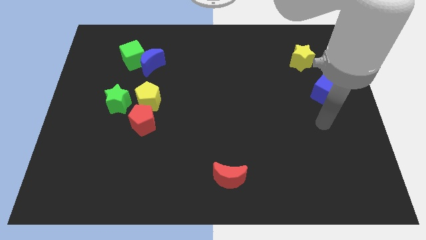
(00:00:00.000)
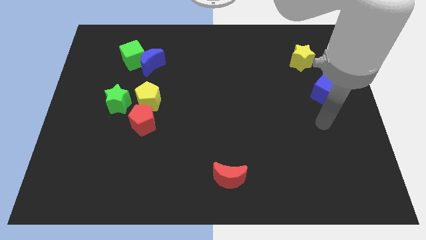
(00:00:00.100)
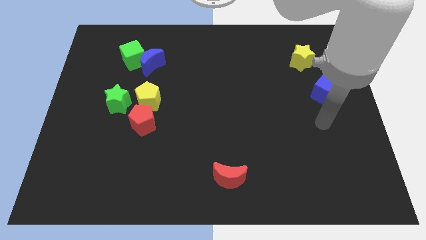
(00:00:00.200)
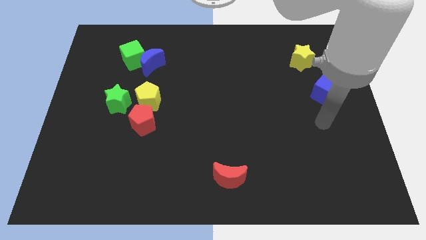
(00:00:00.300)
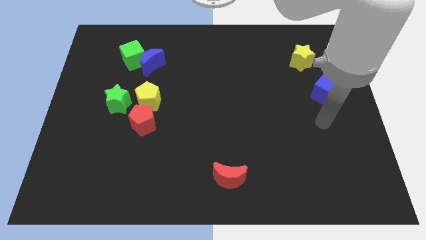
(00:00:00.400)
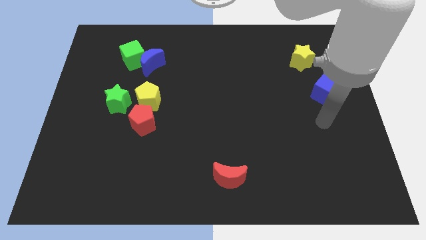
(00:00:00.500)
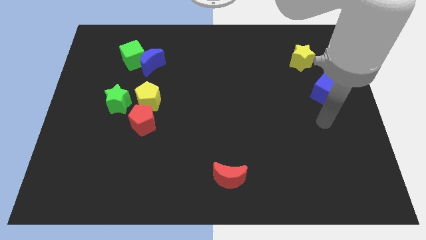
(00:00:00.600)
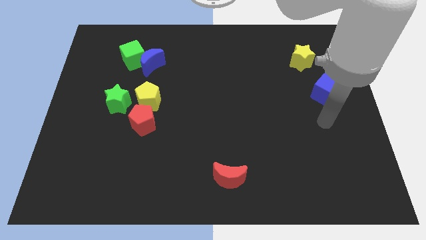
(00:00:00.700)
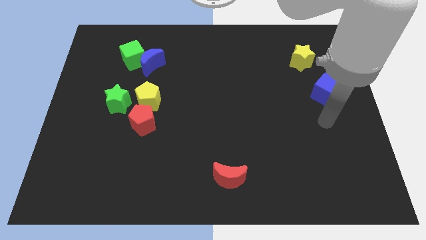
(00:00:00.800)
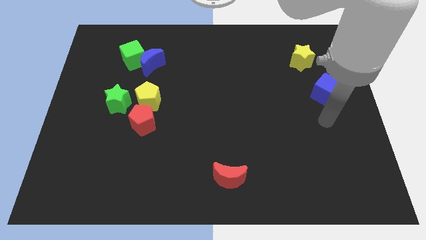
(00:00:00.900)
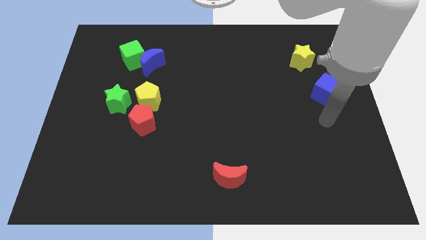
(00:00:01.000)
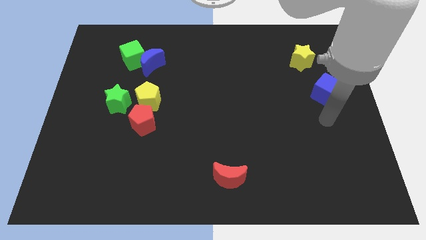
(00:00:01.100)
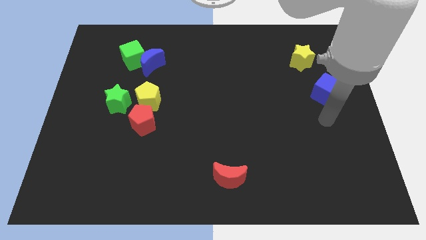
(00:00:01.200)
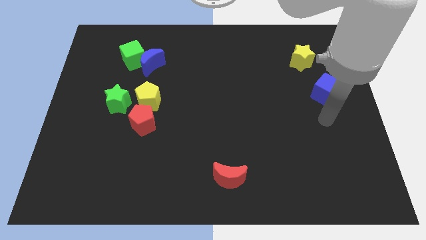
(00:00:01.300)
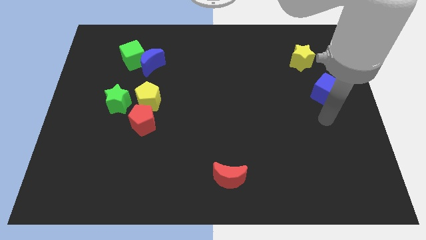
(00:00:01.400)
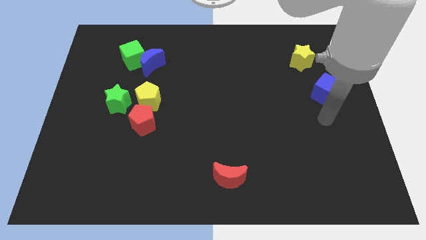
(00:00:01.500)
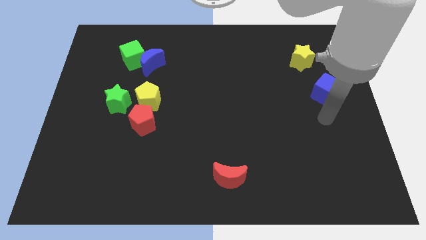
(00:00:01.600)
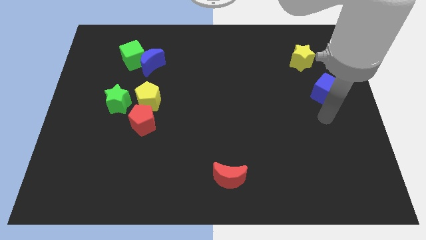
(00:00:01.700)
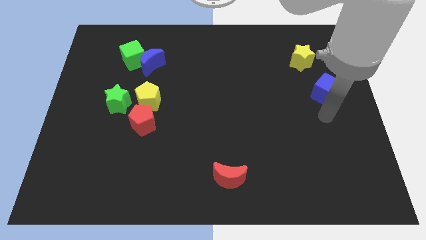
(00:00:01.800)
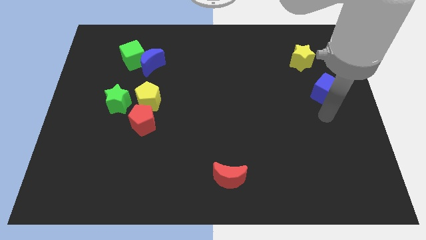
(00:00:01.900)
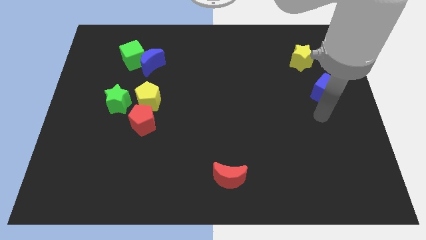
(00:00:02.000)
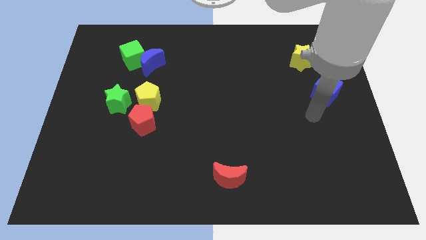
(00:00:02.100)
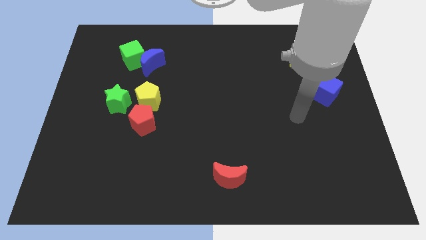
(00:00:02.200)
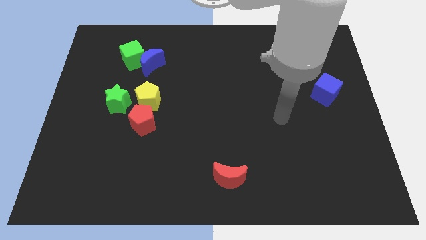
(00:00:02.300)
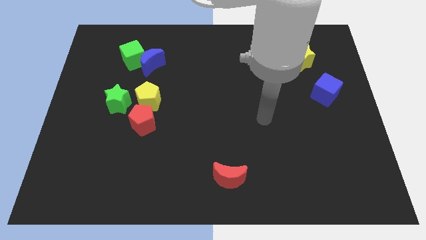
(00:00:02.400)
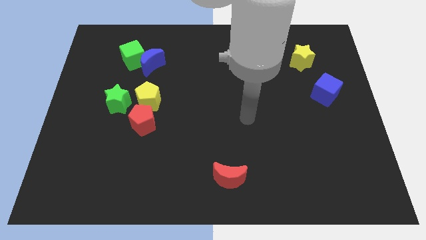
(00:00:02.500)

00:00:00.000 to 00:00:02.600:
move your hand towards the left side

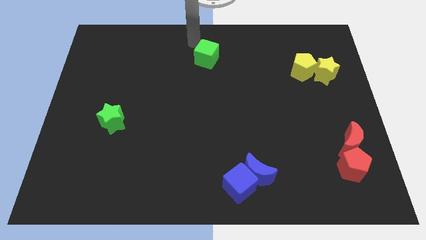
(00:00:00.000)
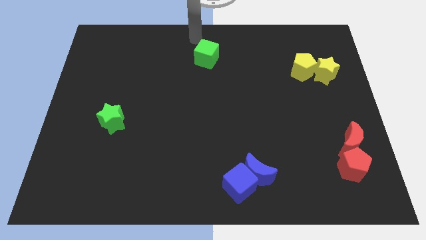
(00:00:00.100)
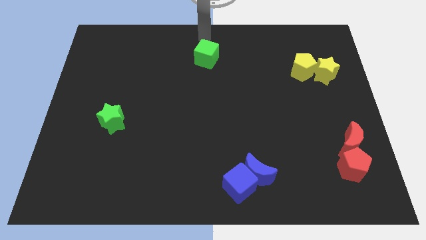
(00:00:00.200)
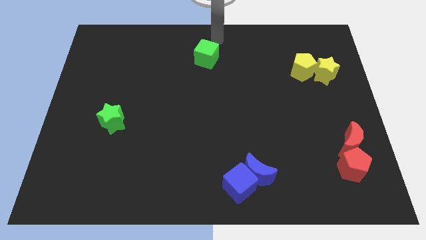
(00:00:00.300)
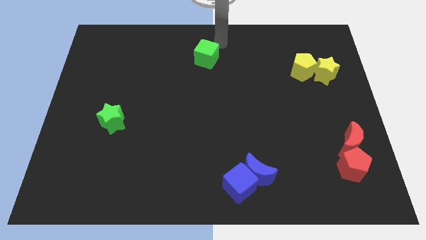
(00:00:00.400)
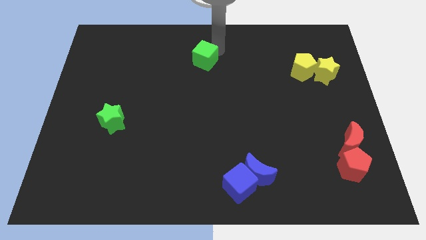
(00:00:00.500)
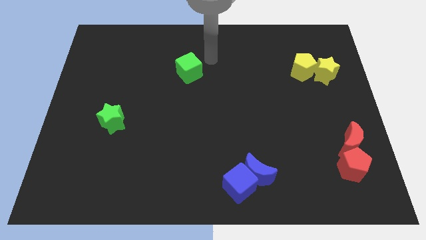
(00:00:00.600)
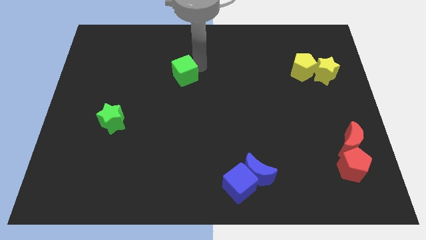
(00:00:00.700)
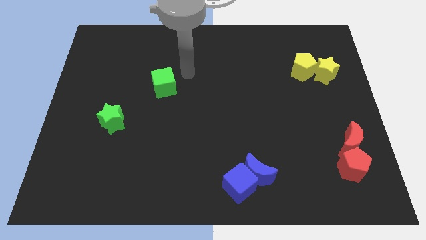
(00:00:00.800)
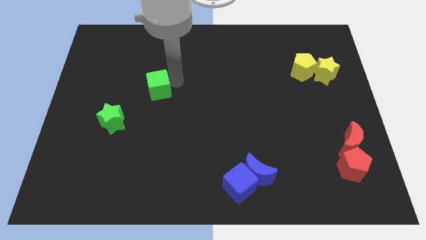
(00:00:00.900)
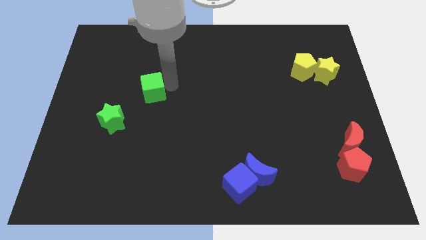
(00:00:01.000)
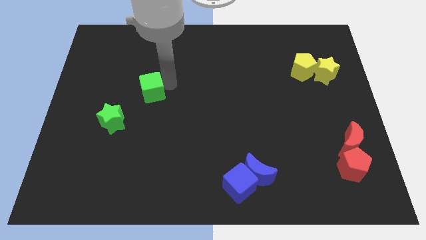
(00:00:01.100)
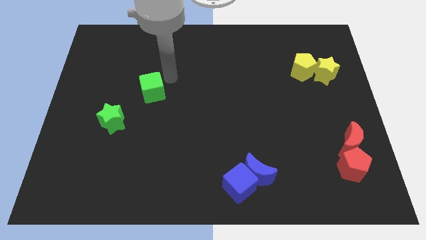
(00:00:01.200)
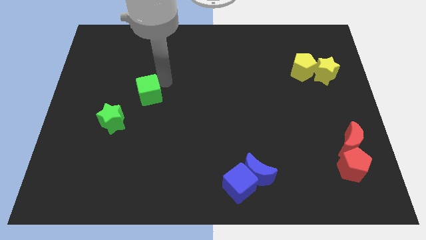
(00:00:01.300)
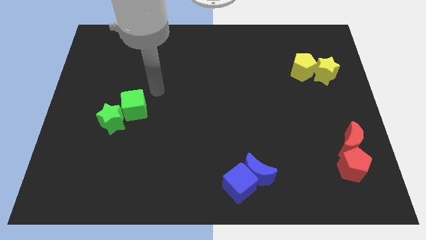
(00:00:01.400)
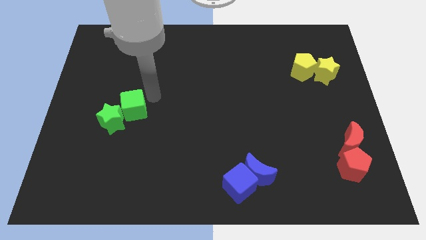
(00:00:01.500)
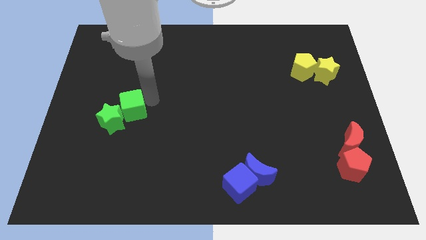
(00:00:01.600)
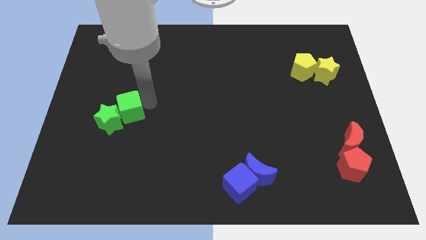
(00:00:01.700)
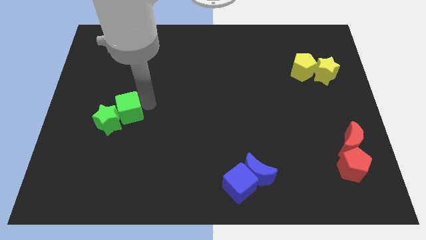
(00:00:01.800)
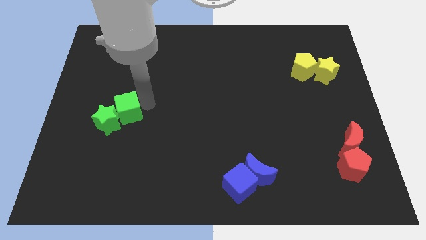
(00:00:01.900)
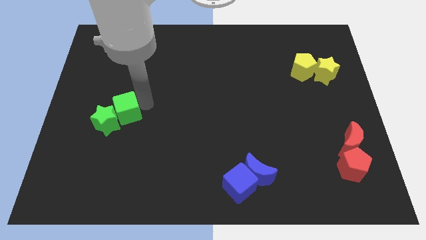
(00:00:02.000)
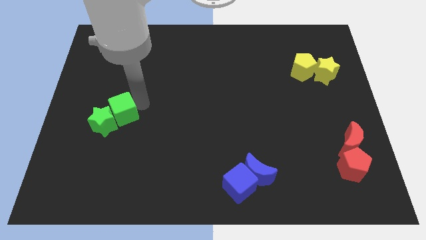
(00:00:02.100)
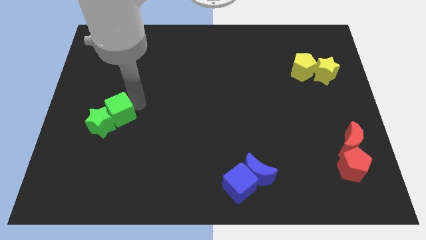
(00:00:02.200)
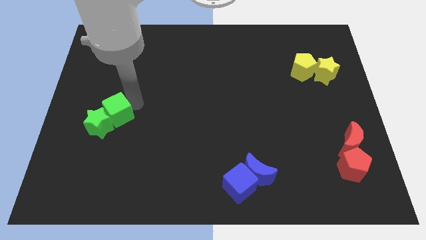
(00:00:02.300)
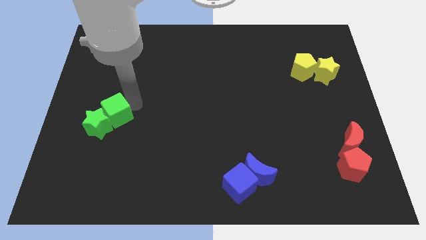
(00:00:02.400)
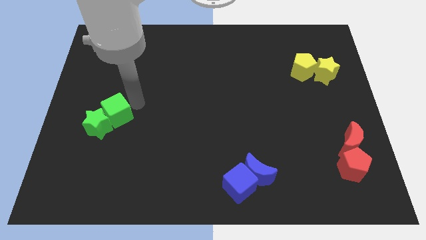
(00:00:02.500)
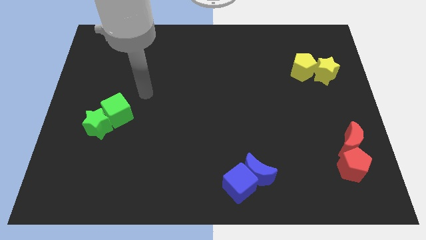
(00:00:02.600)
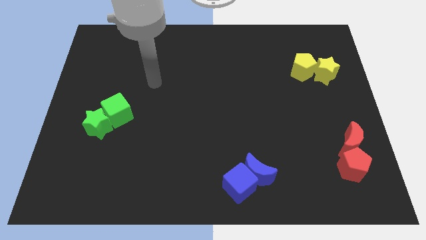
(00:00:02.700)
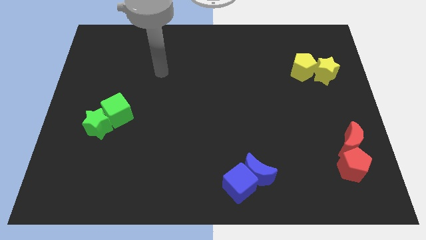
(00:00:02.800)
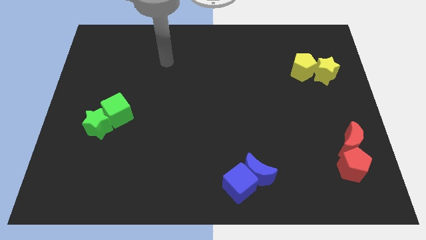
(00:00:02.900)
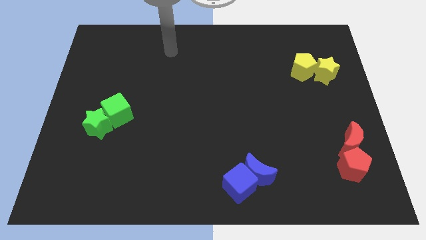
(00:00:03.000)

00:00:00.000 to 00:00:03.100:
push the green cube into the green star towards the left of the board

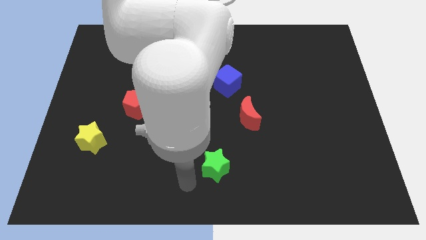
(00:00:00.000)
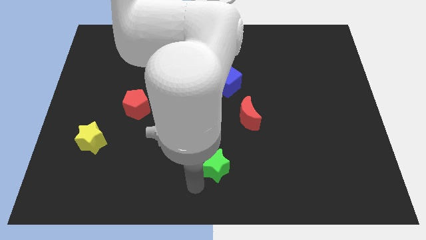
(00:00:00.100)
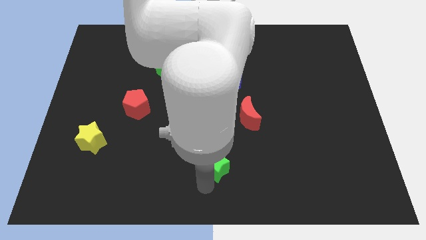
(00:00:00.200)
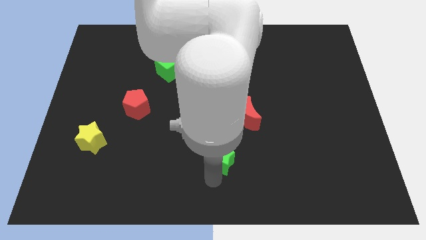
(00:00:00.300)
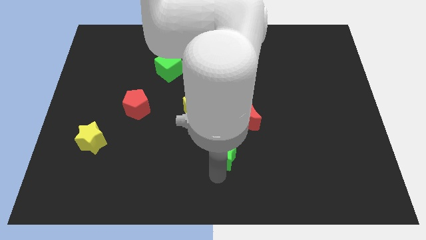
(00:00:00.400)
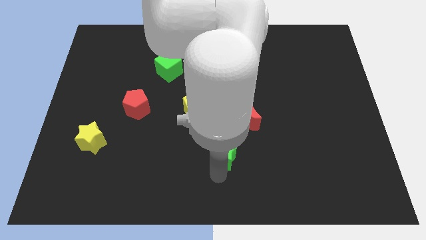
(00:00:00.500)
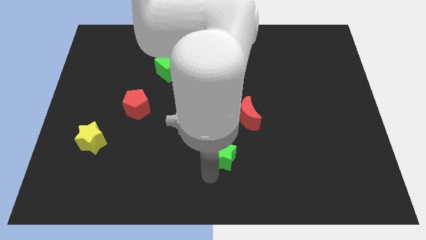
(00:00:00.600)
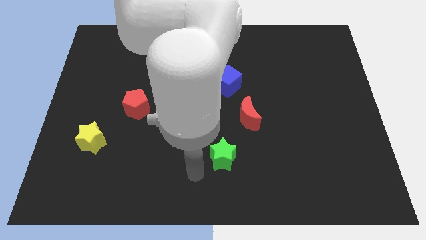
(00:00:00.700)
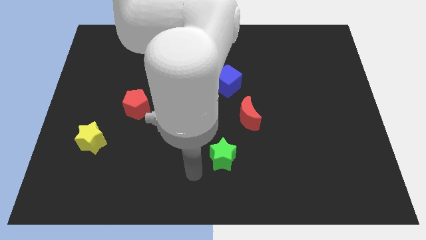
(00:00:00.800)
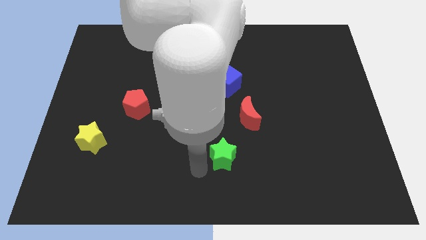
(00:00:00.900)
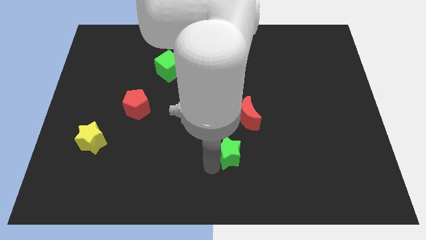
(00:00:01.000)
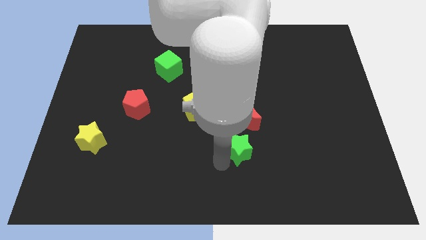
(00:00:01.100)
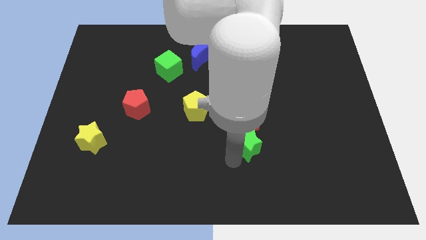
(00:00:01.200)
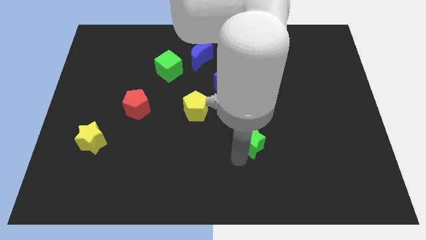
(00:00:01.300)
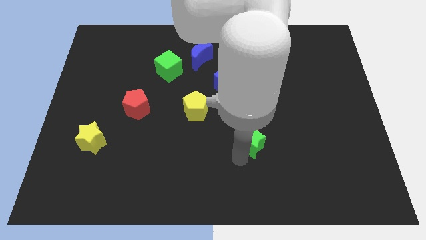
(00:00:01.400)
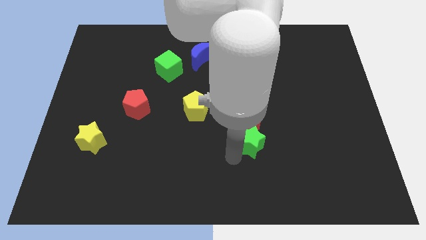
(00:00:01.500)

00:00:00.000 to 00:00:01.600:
place the green star below the red crescent

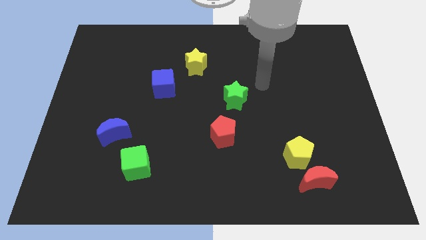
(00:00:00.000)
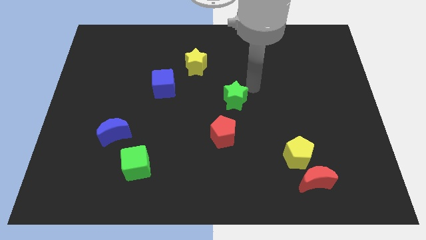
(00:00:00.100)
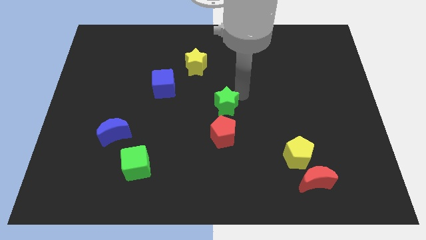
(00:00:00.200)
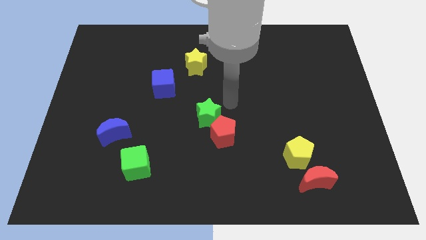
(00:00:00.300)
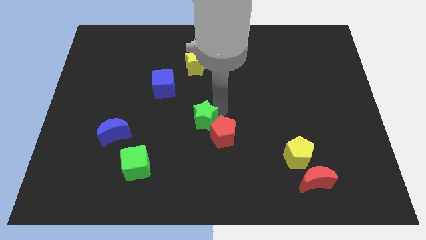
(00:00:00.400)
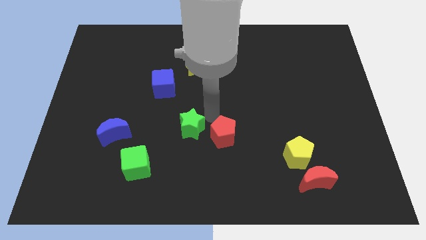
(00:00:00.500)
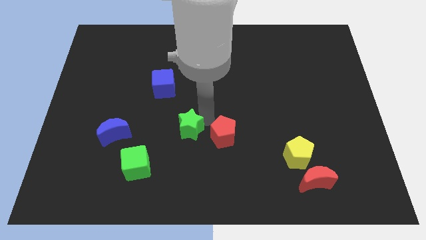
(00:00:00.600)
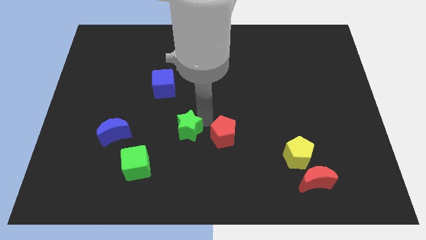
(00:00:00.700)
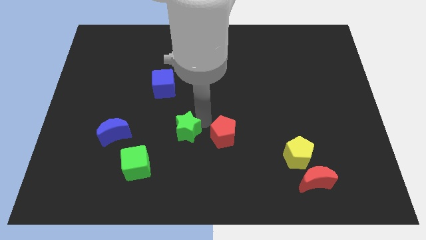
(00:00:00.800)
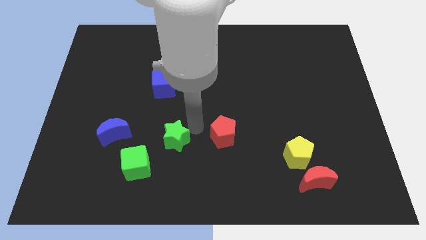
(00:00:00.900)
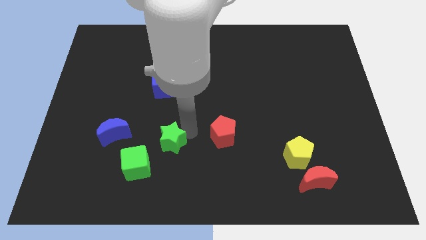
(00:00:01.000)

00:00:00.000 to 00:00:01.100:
slide the green star to the left of the red pentagon

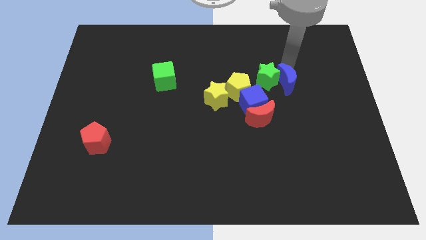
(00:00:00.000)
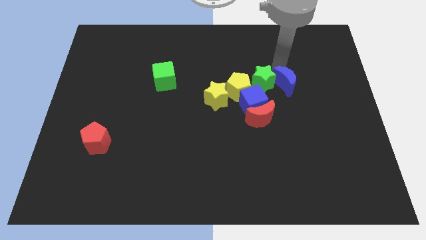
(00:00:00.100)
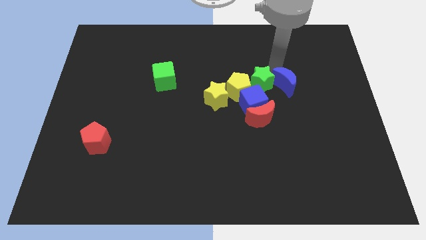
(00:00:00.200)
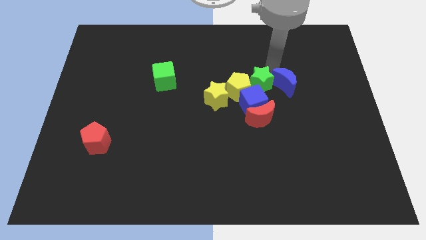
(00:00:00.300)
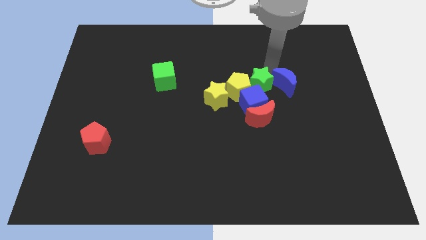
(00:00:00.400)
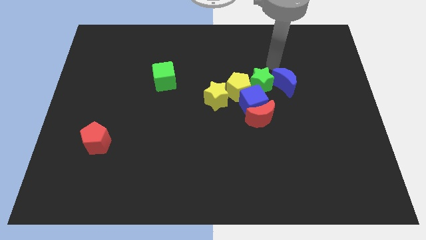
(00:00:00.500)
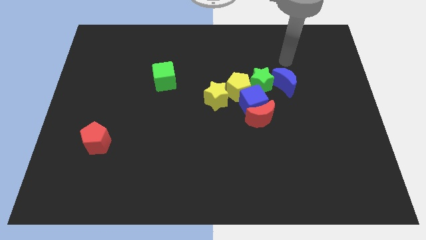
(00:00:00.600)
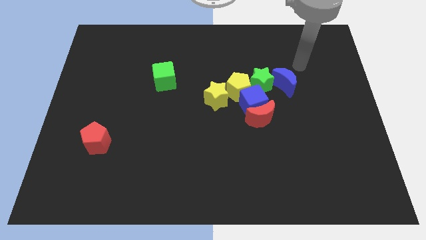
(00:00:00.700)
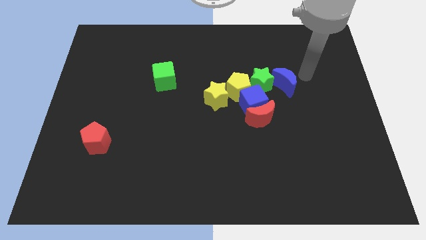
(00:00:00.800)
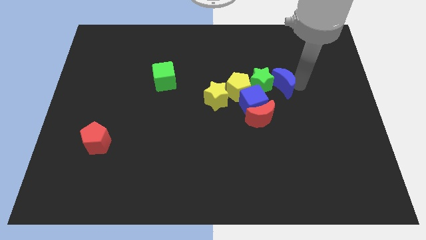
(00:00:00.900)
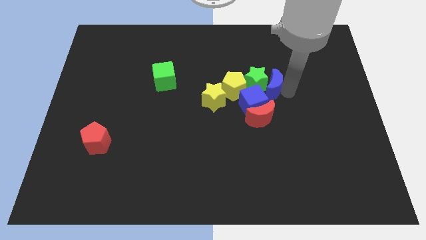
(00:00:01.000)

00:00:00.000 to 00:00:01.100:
move the green star clode to the yellow pentagon
